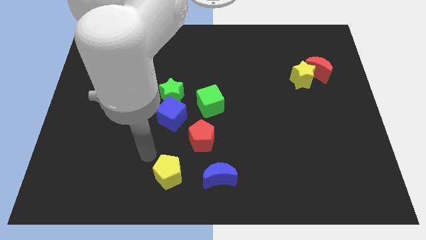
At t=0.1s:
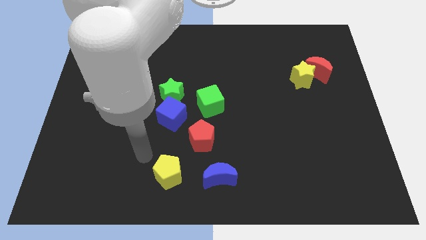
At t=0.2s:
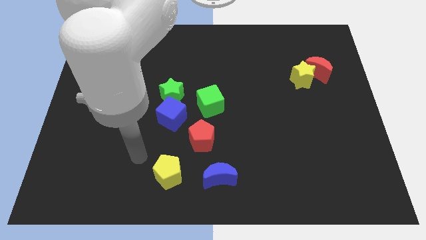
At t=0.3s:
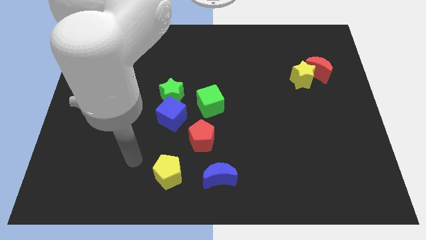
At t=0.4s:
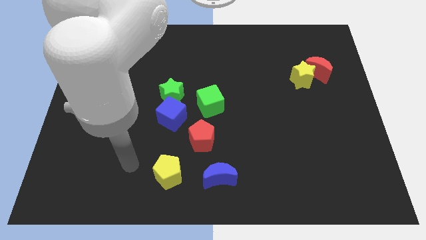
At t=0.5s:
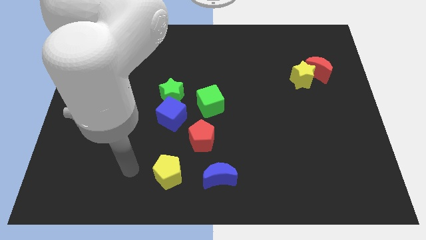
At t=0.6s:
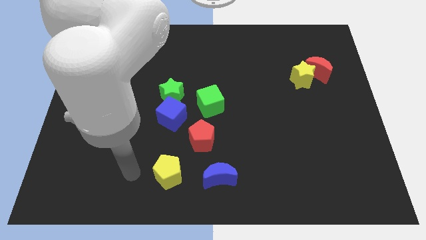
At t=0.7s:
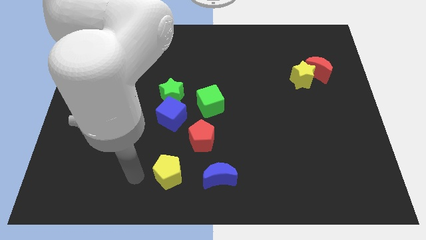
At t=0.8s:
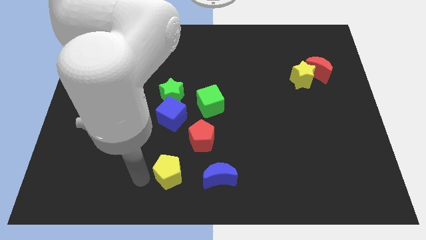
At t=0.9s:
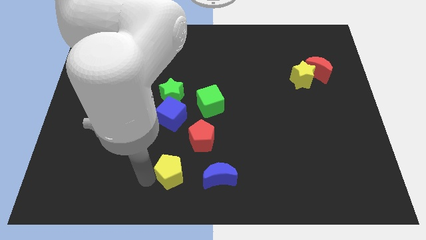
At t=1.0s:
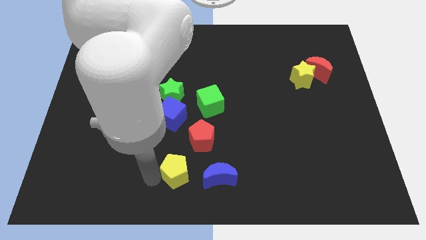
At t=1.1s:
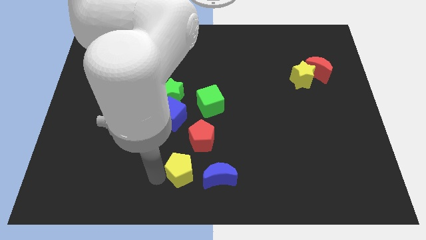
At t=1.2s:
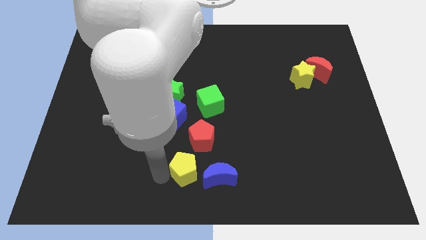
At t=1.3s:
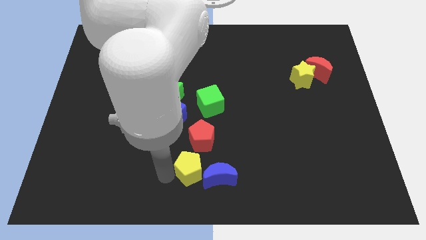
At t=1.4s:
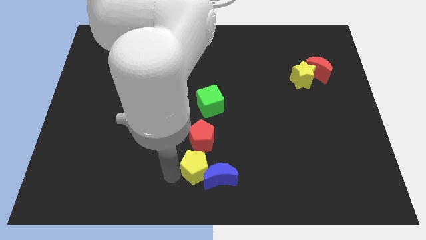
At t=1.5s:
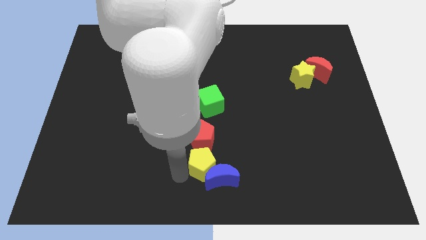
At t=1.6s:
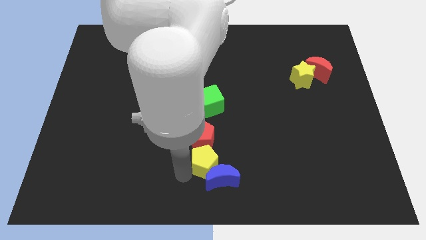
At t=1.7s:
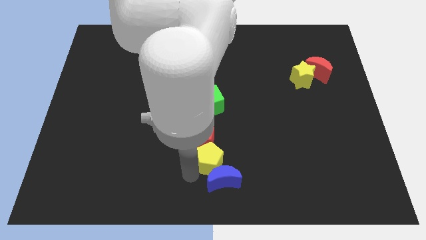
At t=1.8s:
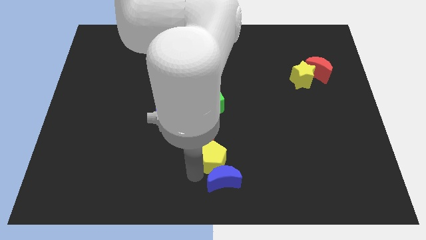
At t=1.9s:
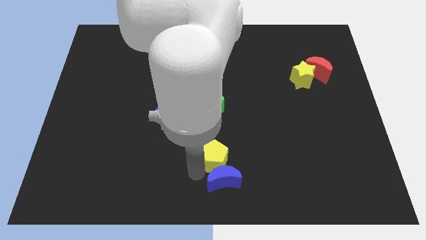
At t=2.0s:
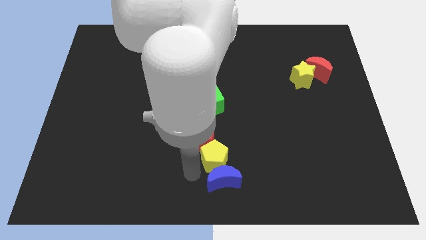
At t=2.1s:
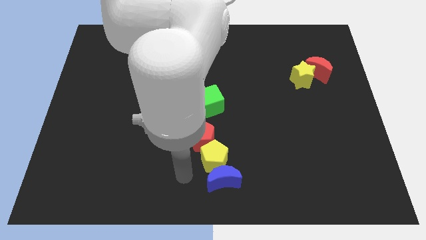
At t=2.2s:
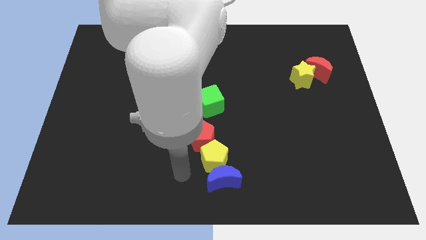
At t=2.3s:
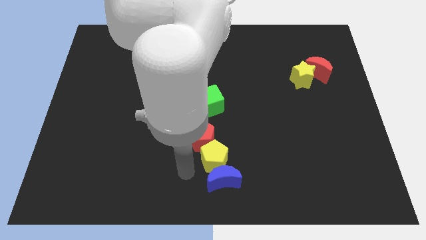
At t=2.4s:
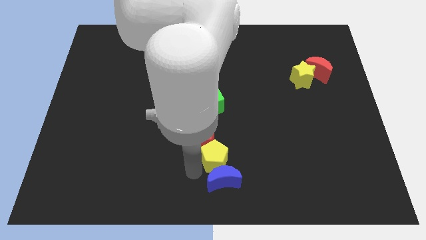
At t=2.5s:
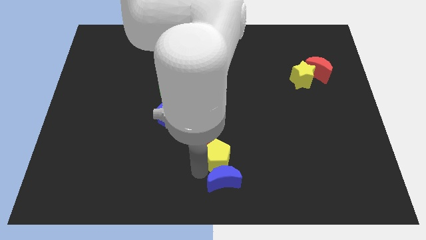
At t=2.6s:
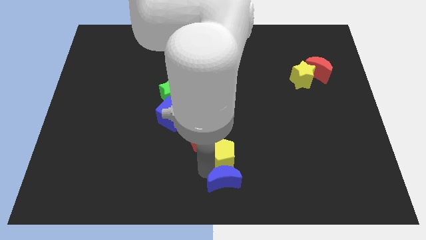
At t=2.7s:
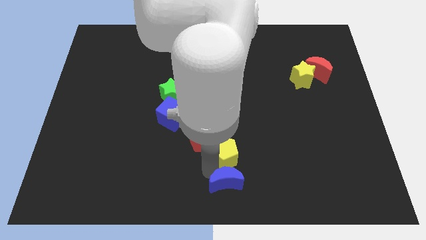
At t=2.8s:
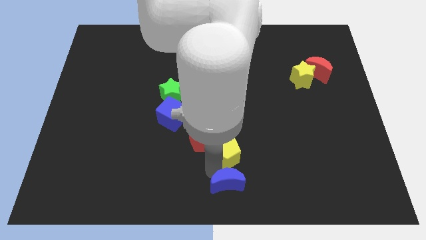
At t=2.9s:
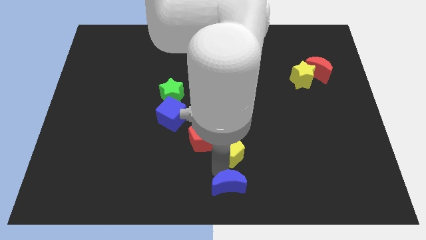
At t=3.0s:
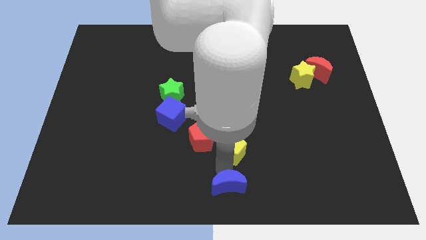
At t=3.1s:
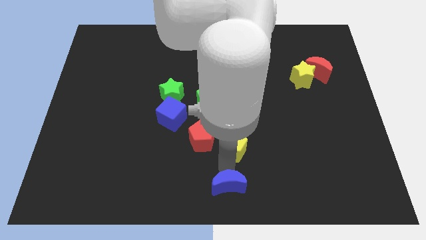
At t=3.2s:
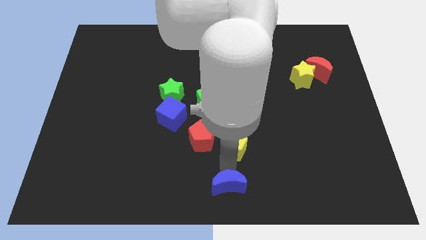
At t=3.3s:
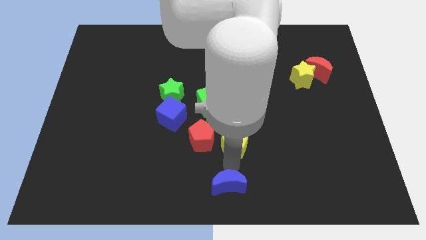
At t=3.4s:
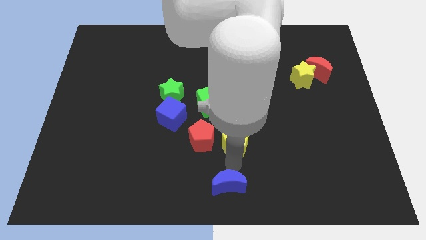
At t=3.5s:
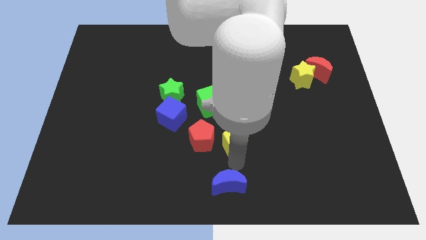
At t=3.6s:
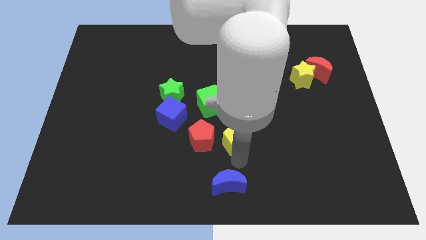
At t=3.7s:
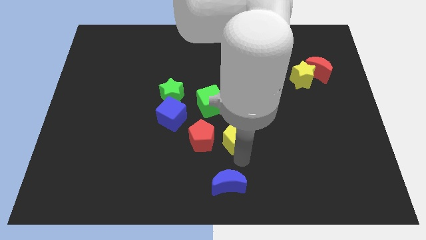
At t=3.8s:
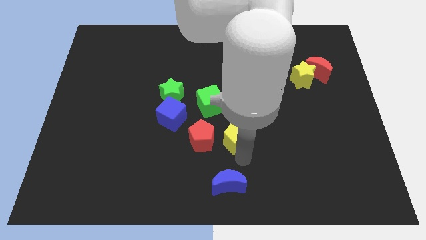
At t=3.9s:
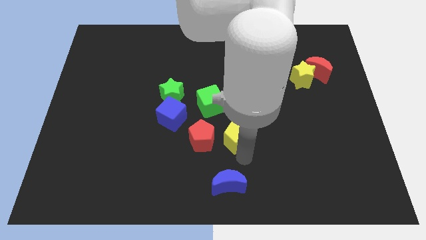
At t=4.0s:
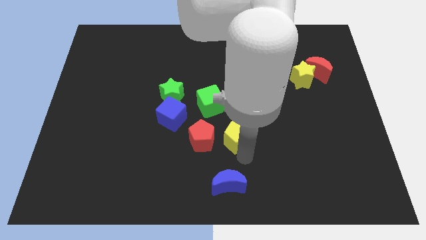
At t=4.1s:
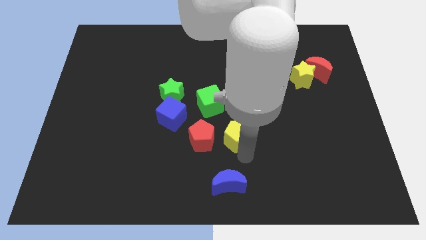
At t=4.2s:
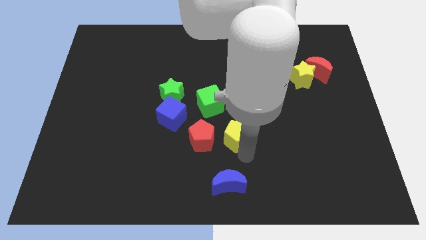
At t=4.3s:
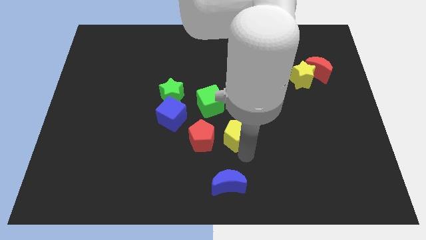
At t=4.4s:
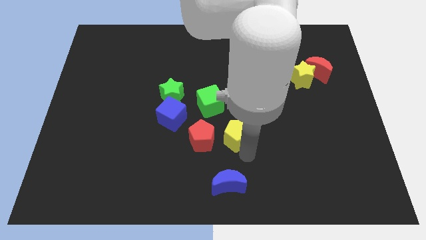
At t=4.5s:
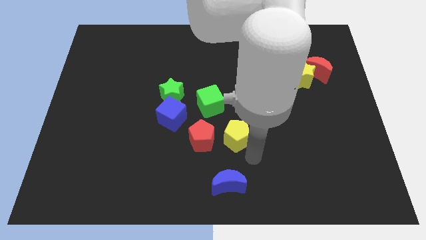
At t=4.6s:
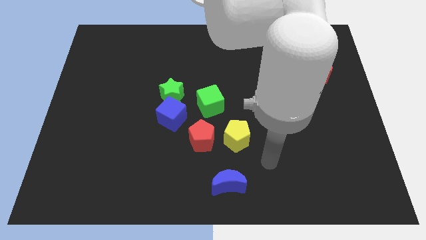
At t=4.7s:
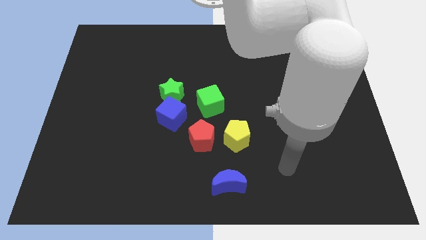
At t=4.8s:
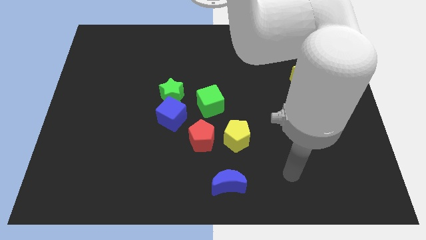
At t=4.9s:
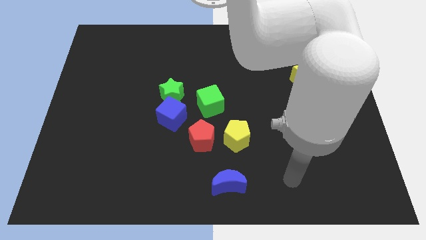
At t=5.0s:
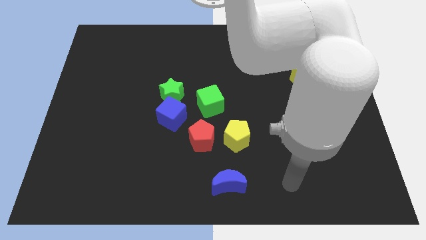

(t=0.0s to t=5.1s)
place the yellow pentagon to the right side of the red pentagon

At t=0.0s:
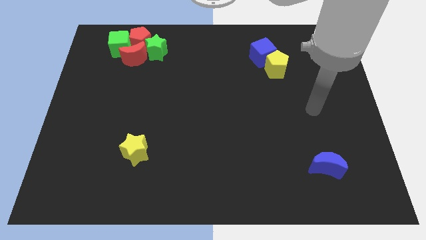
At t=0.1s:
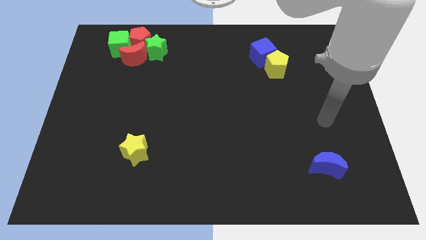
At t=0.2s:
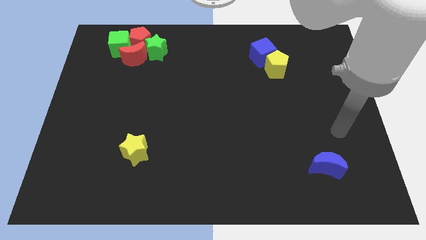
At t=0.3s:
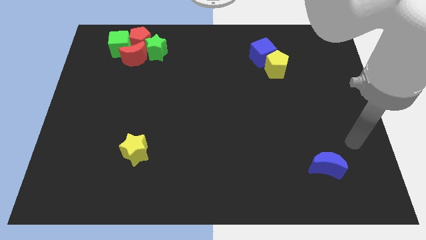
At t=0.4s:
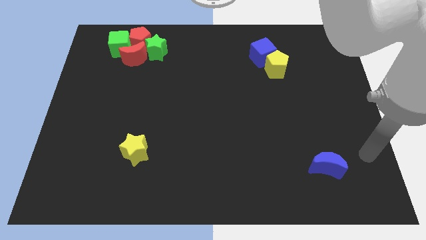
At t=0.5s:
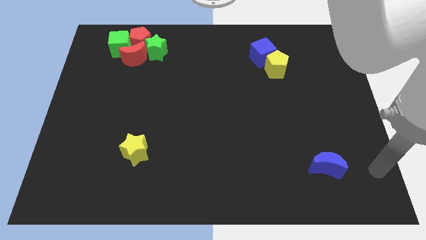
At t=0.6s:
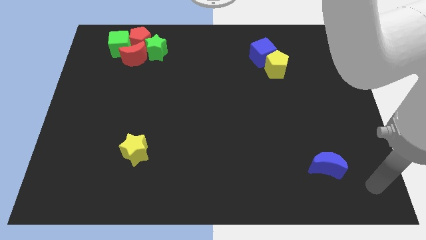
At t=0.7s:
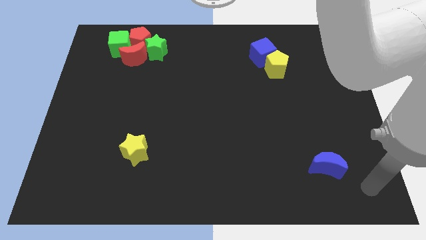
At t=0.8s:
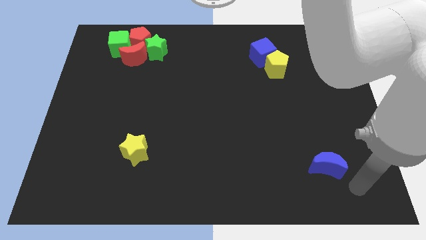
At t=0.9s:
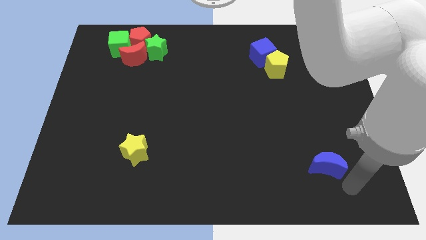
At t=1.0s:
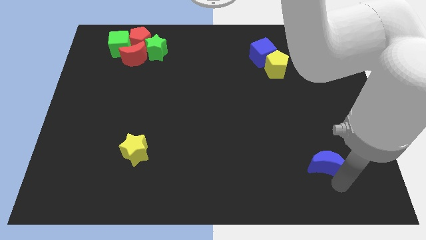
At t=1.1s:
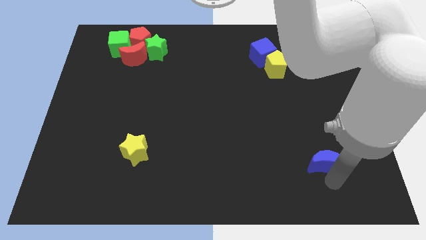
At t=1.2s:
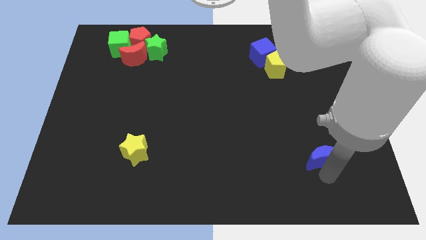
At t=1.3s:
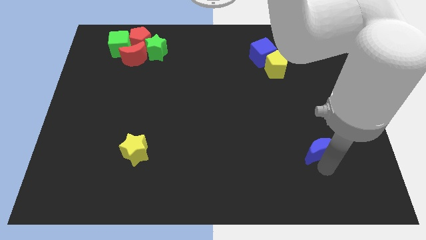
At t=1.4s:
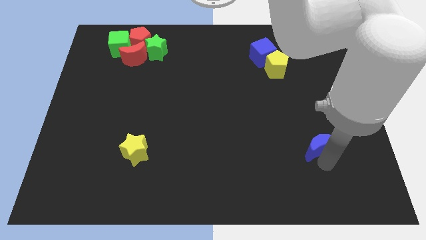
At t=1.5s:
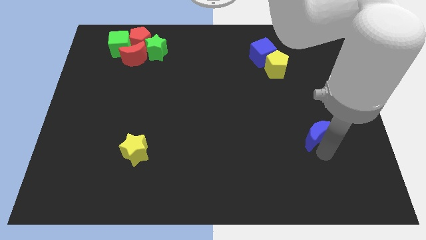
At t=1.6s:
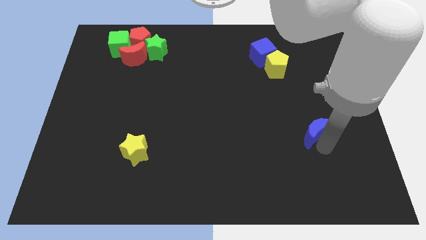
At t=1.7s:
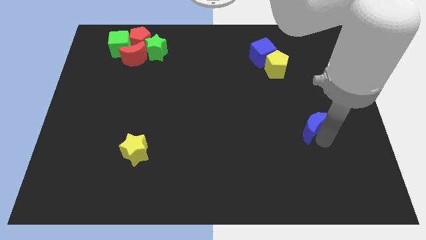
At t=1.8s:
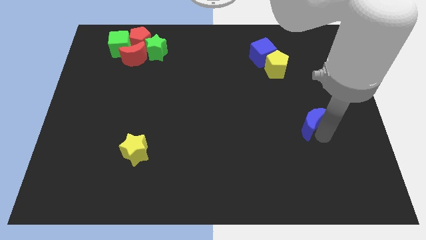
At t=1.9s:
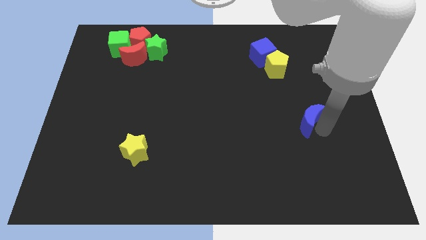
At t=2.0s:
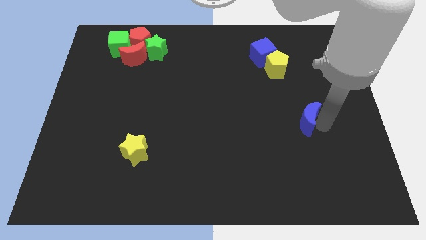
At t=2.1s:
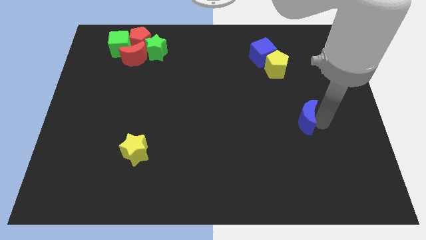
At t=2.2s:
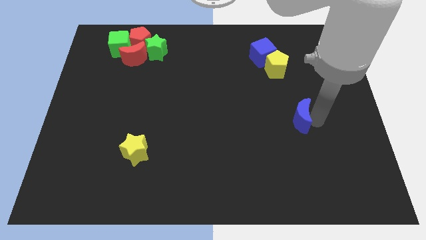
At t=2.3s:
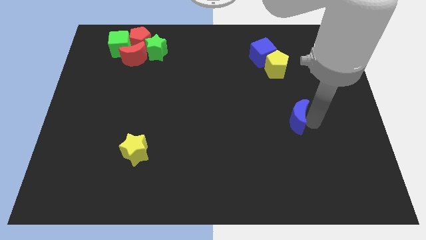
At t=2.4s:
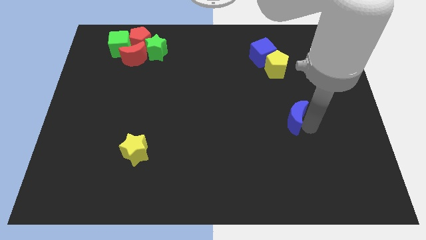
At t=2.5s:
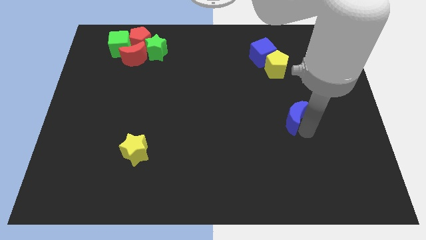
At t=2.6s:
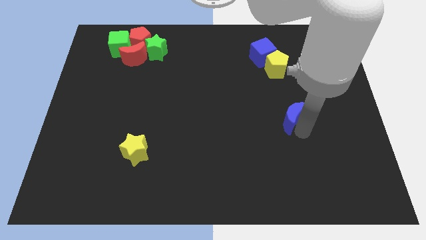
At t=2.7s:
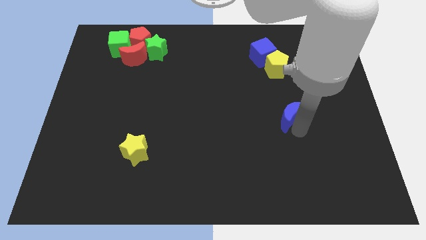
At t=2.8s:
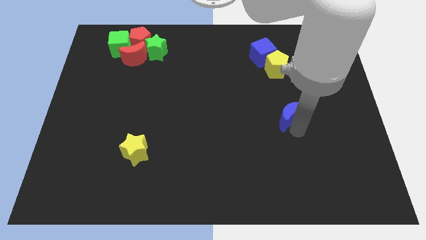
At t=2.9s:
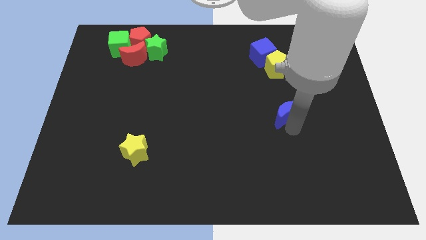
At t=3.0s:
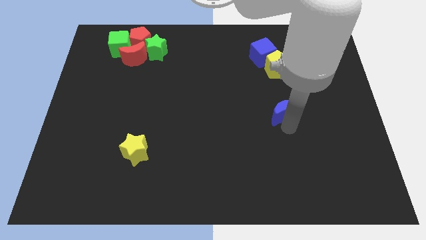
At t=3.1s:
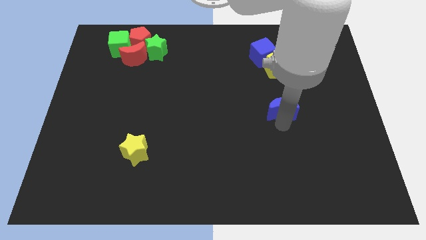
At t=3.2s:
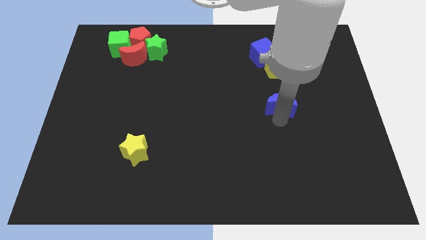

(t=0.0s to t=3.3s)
place the blue moon vertical to the yellow pentagon

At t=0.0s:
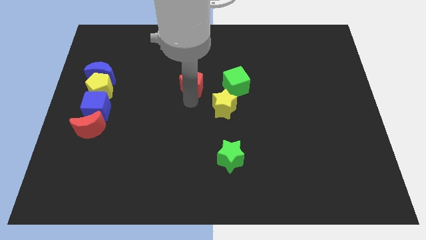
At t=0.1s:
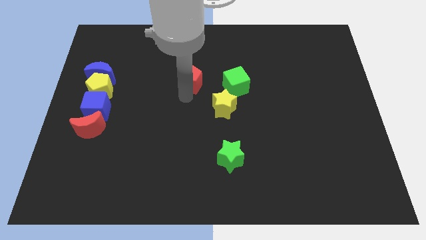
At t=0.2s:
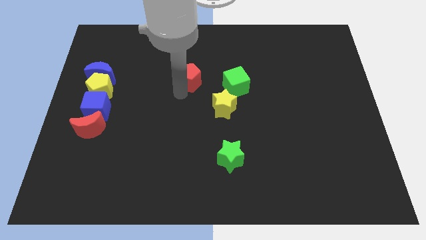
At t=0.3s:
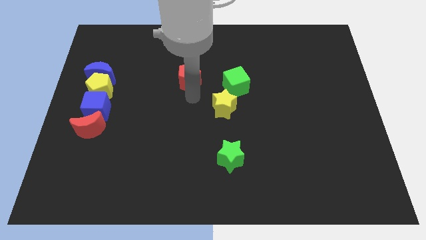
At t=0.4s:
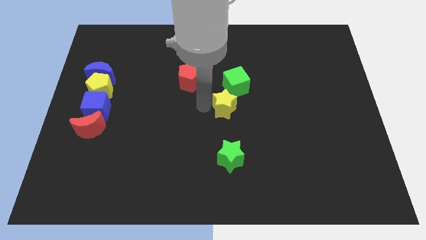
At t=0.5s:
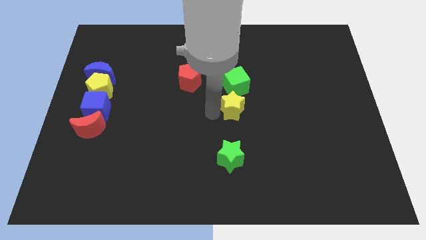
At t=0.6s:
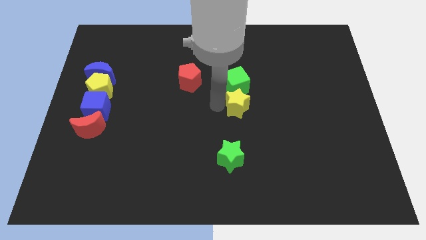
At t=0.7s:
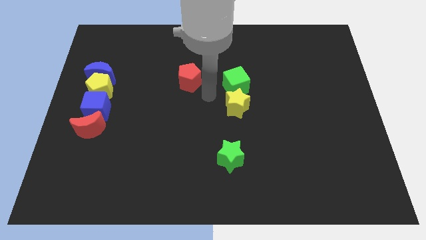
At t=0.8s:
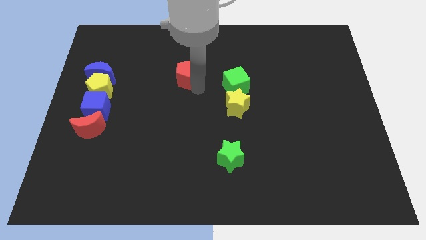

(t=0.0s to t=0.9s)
move the yellow star to the bottom of the green cube
